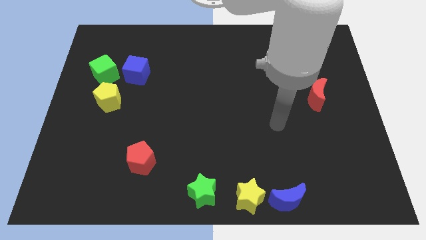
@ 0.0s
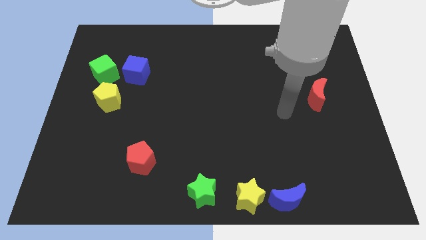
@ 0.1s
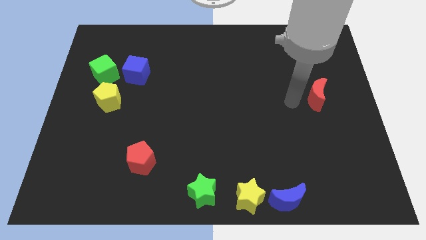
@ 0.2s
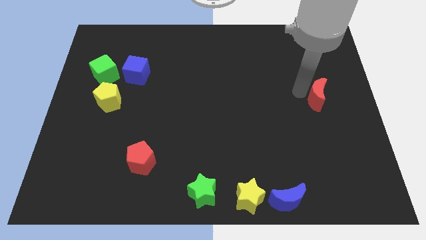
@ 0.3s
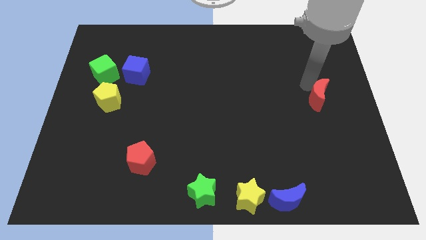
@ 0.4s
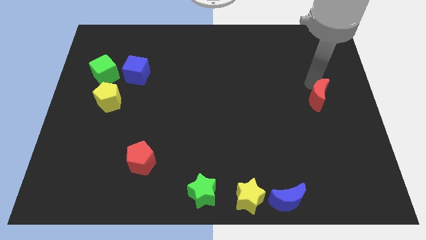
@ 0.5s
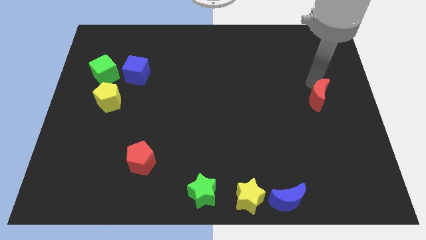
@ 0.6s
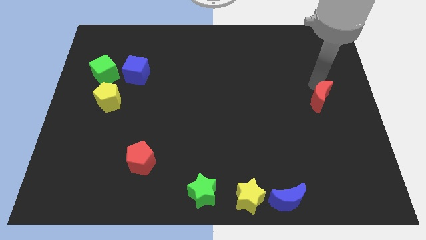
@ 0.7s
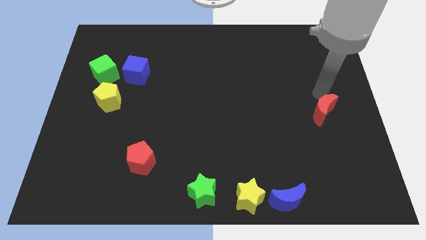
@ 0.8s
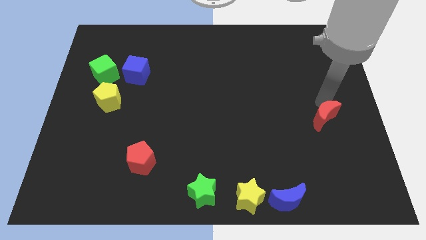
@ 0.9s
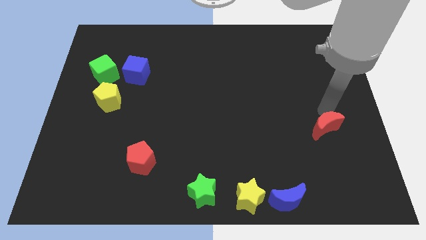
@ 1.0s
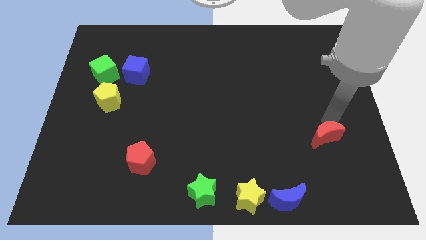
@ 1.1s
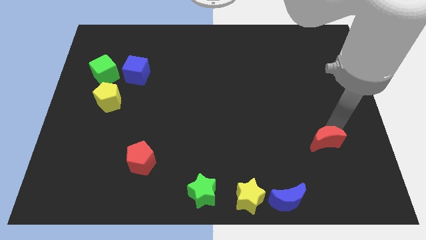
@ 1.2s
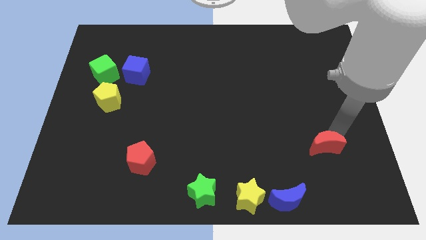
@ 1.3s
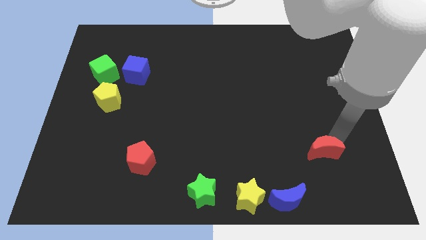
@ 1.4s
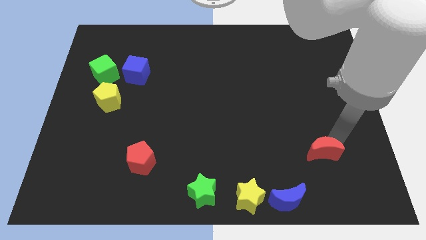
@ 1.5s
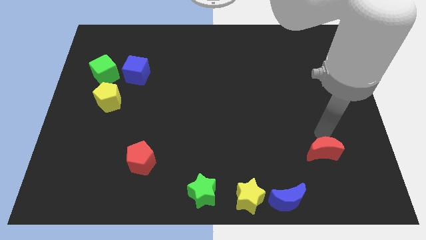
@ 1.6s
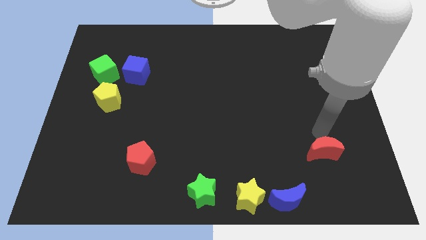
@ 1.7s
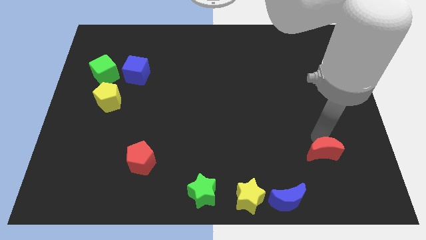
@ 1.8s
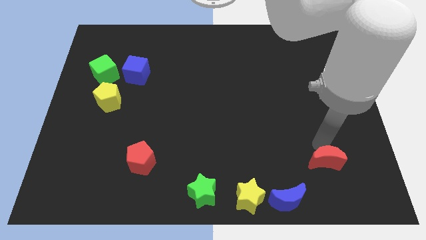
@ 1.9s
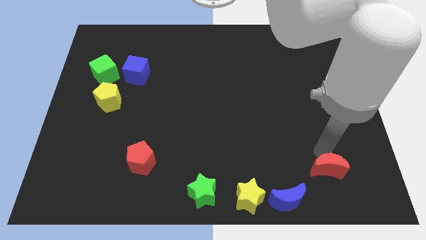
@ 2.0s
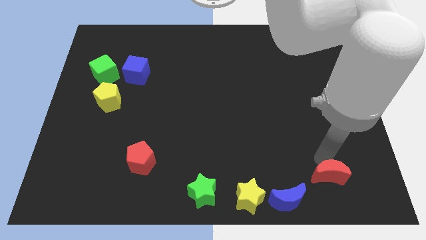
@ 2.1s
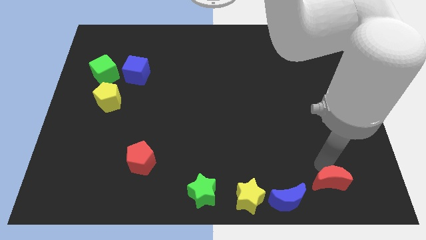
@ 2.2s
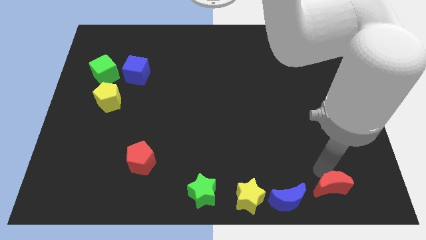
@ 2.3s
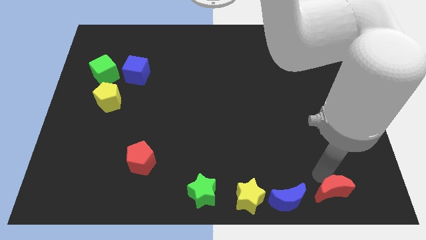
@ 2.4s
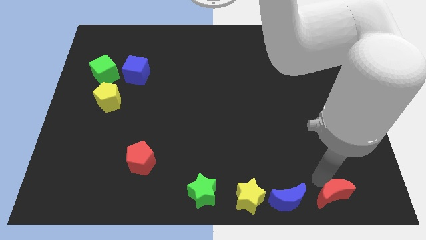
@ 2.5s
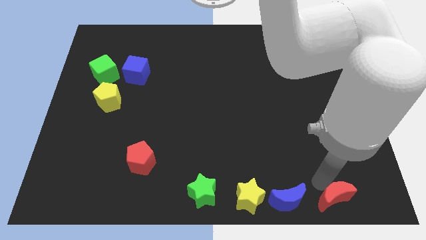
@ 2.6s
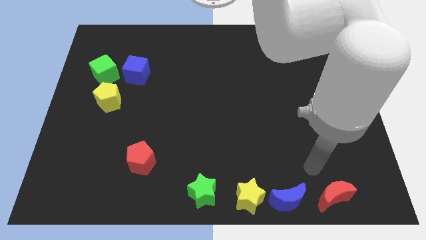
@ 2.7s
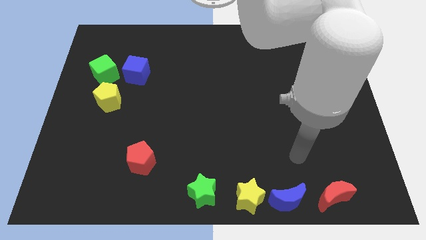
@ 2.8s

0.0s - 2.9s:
place the red crescent beside blue crescent at the right bottom of the board

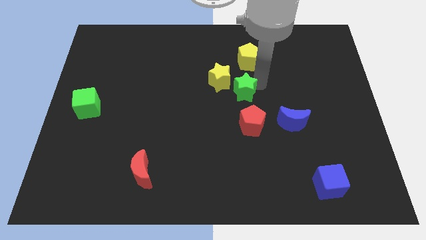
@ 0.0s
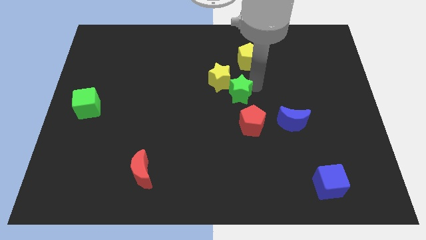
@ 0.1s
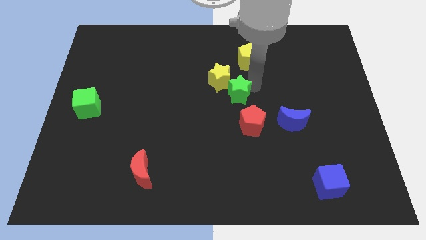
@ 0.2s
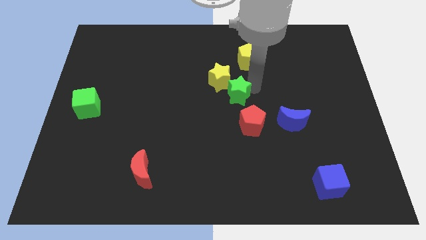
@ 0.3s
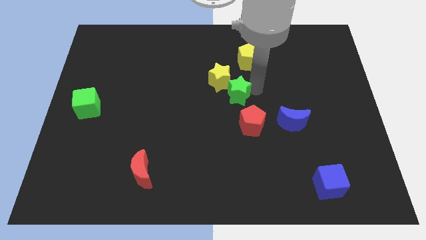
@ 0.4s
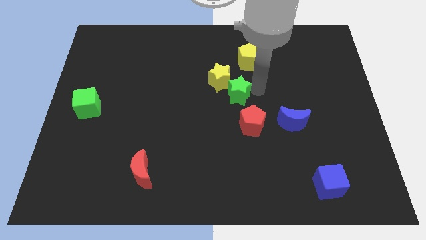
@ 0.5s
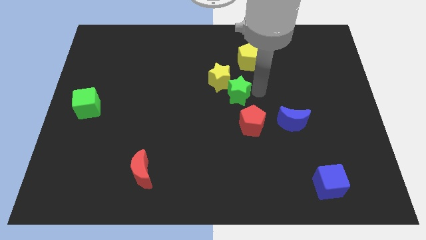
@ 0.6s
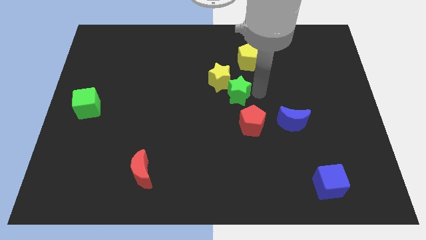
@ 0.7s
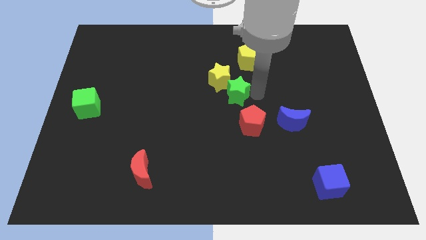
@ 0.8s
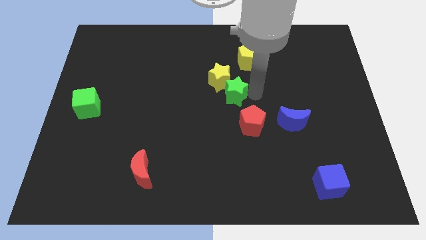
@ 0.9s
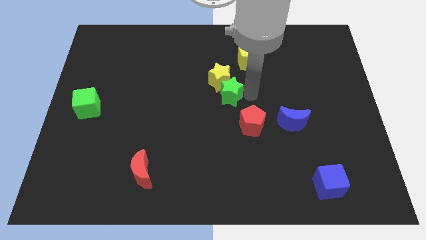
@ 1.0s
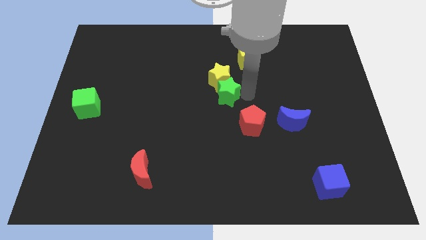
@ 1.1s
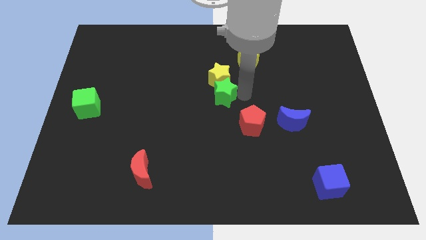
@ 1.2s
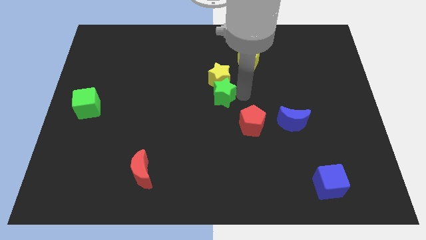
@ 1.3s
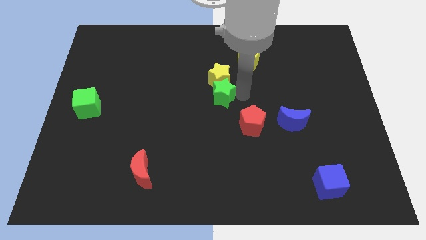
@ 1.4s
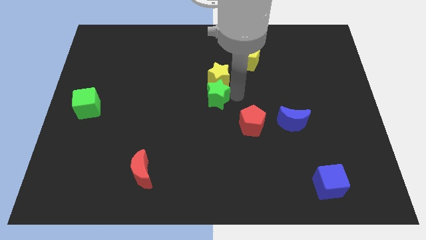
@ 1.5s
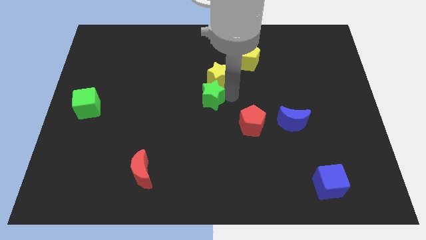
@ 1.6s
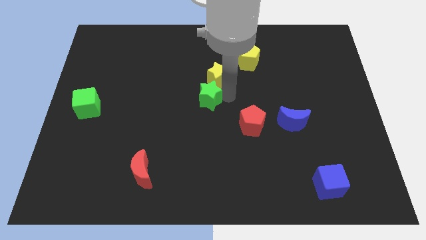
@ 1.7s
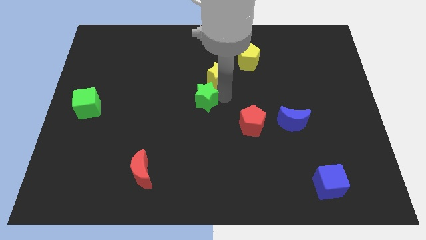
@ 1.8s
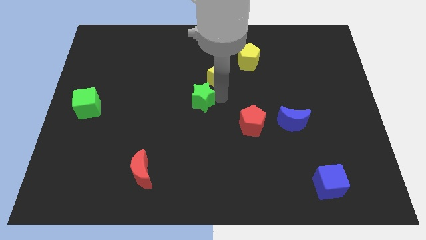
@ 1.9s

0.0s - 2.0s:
put the green star towards the bottom left side of the yellow star

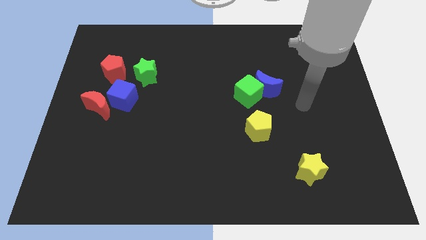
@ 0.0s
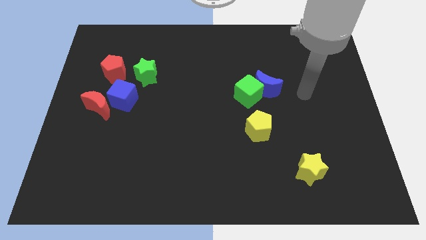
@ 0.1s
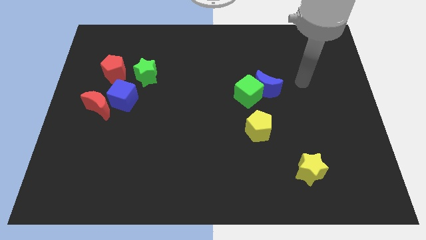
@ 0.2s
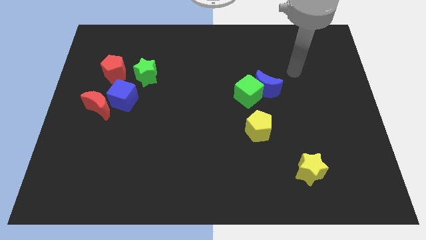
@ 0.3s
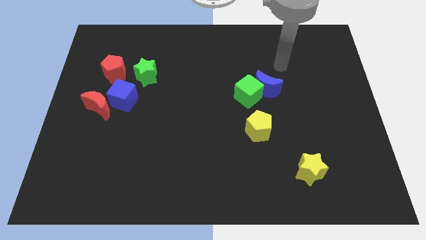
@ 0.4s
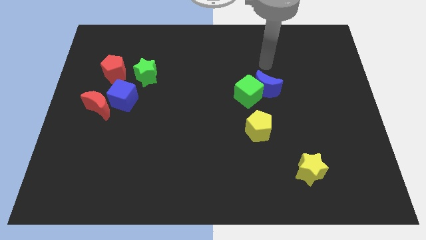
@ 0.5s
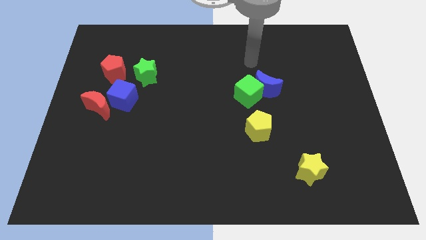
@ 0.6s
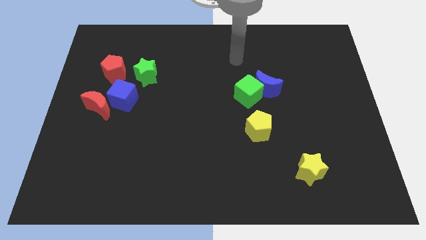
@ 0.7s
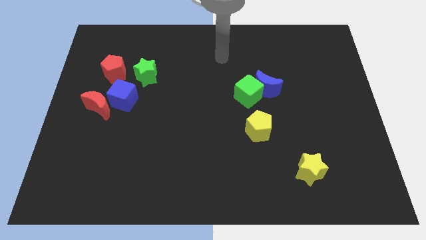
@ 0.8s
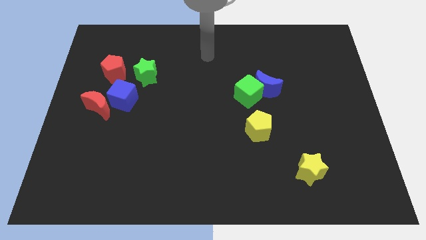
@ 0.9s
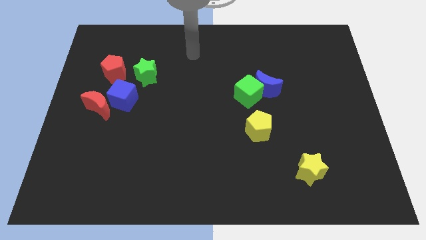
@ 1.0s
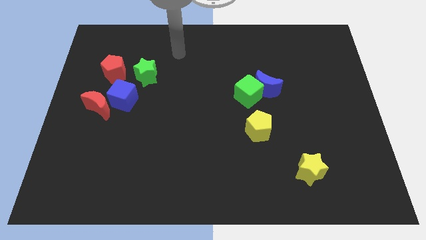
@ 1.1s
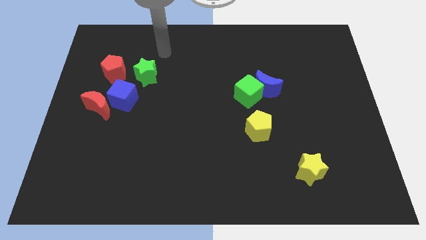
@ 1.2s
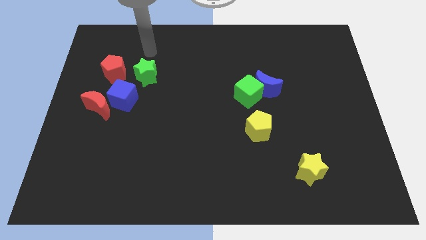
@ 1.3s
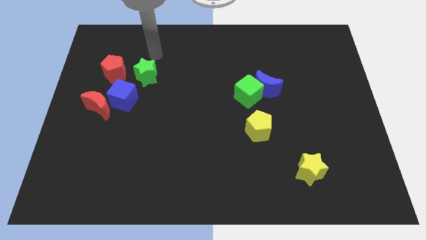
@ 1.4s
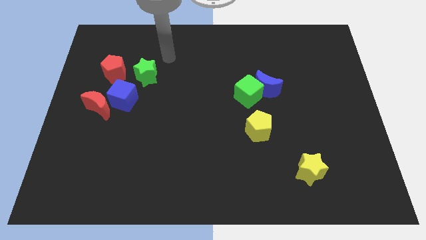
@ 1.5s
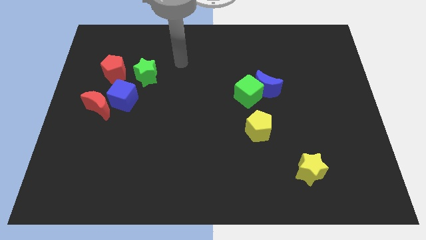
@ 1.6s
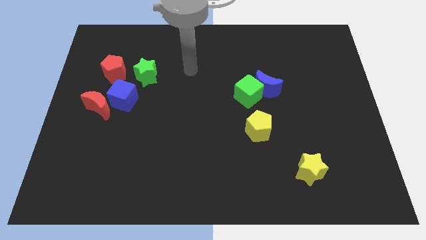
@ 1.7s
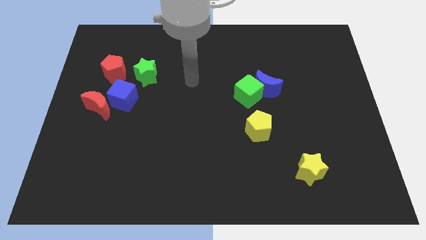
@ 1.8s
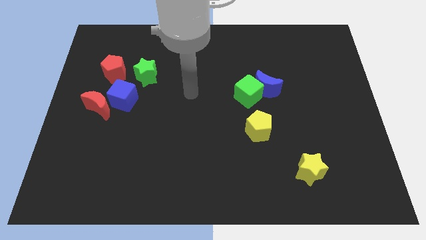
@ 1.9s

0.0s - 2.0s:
place your arm in between the green star and green cube

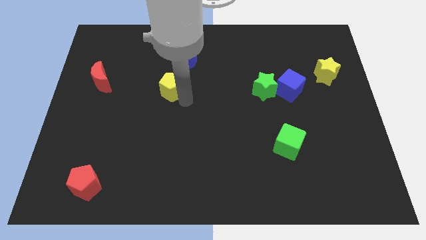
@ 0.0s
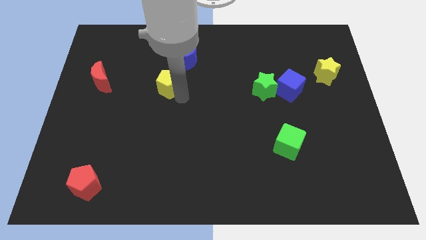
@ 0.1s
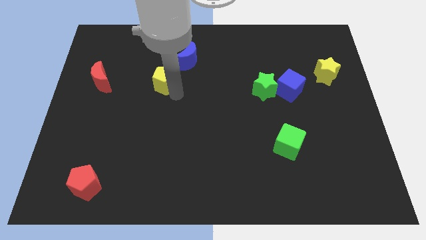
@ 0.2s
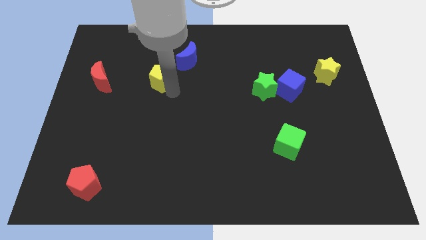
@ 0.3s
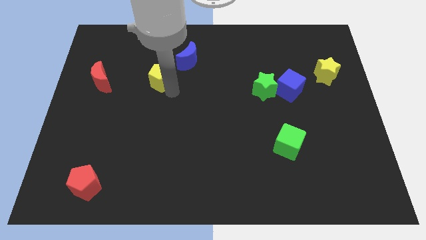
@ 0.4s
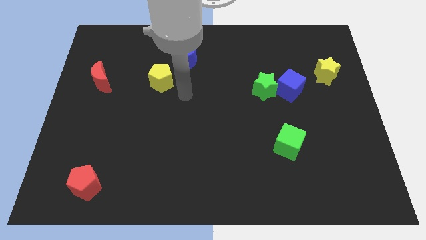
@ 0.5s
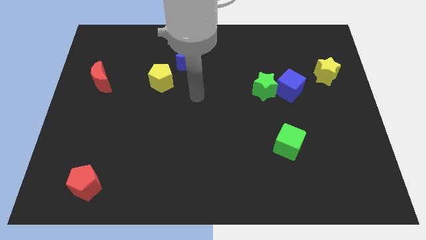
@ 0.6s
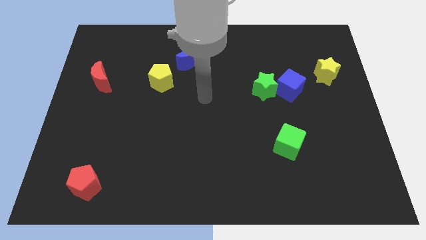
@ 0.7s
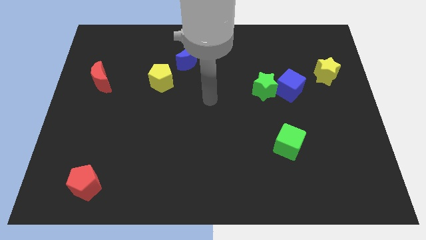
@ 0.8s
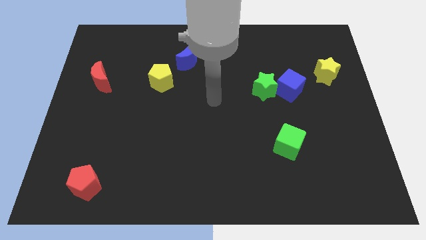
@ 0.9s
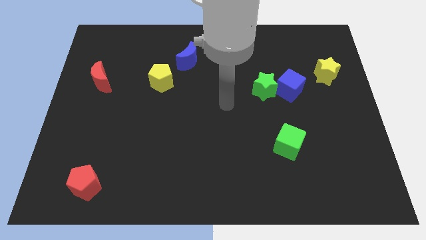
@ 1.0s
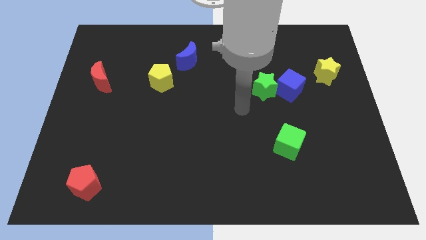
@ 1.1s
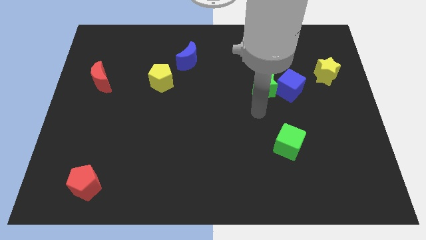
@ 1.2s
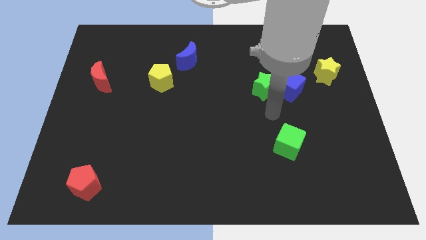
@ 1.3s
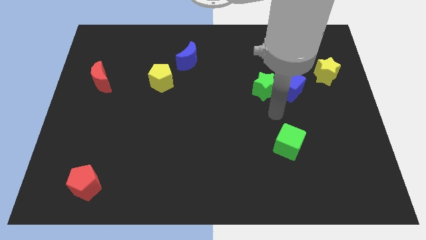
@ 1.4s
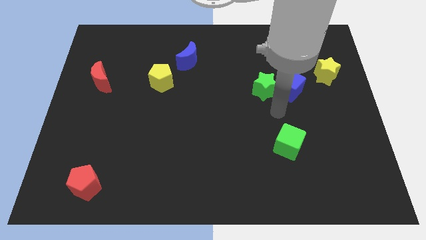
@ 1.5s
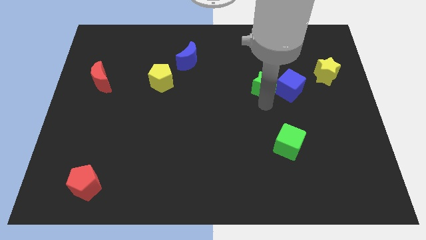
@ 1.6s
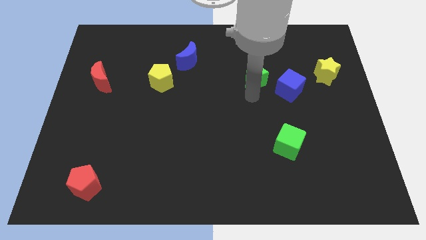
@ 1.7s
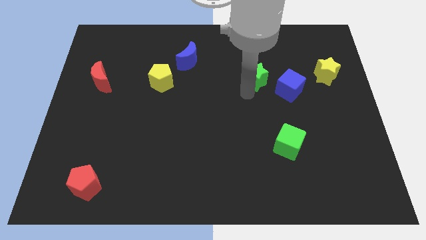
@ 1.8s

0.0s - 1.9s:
move arm near green star

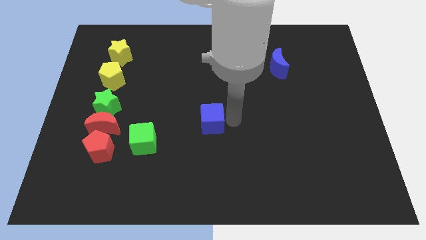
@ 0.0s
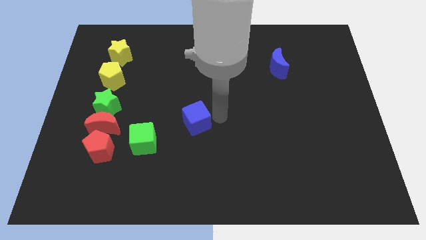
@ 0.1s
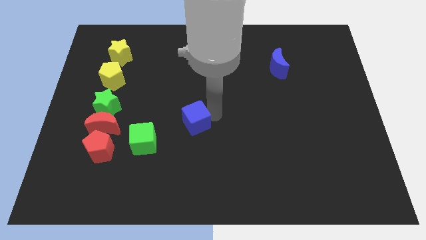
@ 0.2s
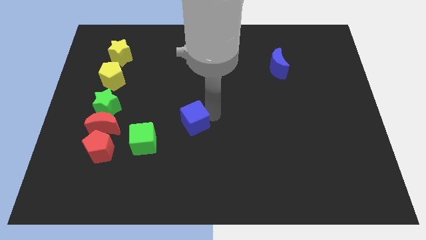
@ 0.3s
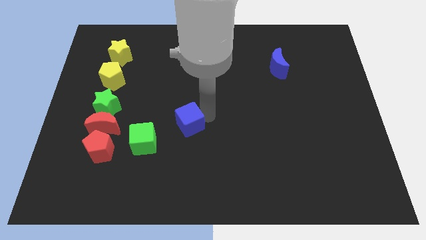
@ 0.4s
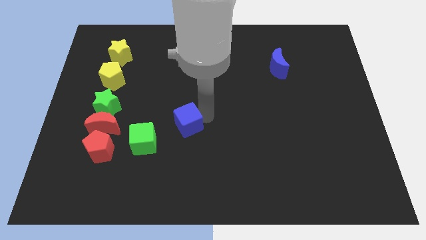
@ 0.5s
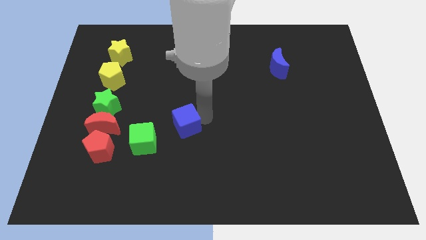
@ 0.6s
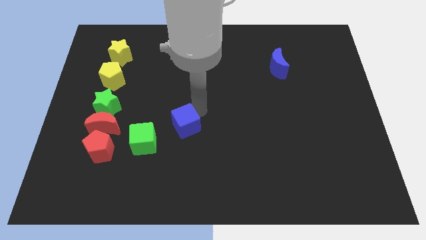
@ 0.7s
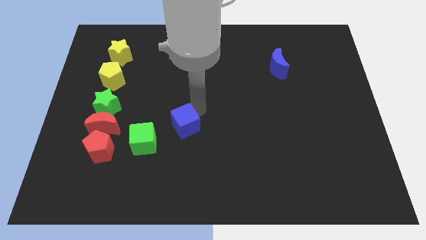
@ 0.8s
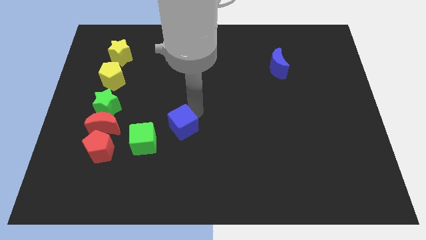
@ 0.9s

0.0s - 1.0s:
move the blue cube towards the green cube
